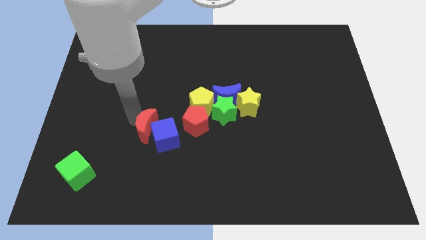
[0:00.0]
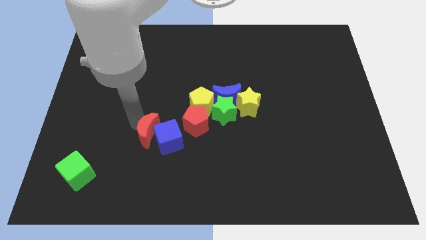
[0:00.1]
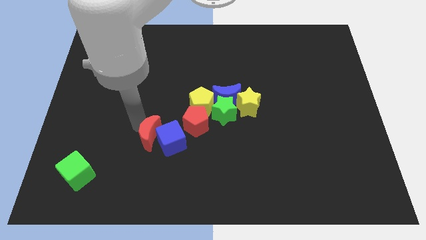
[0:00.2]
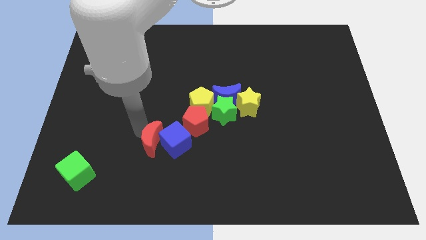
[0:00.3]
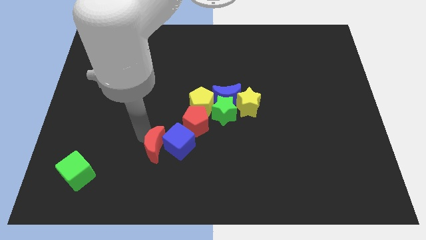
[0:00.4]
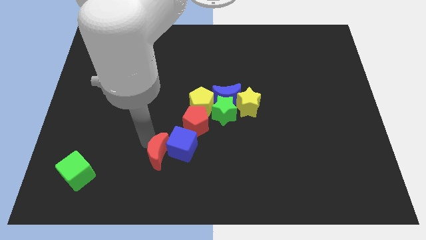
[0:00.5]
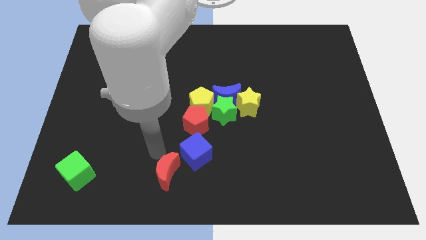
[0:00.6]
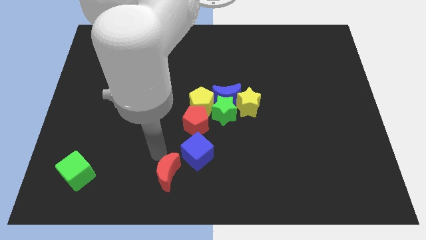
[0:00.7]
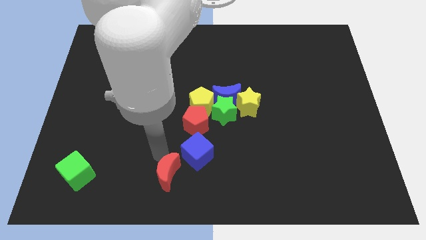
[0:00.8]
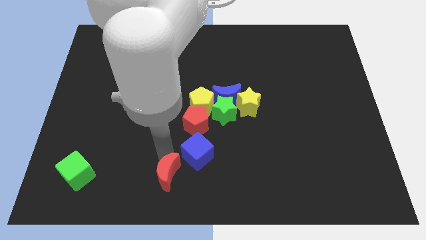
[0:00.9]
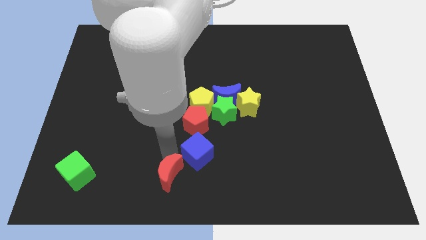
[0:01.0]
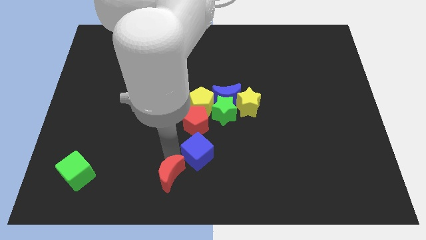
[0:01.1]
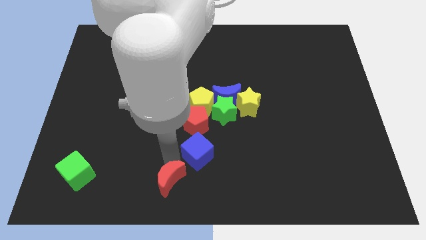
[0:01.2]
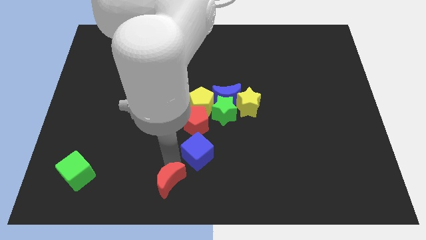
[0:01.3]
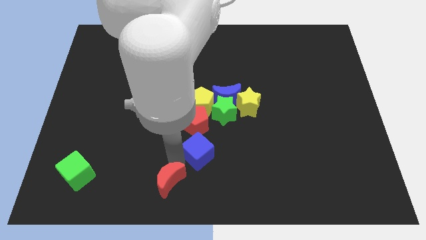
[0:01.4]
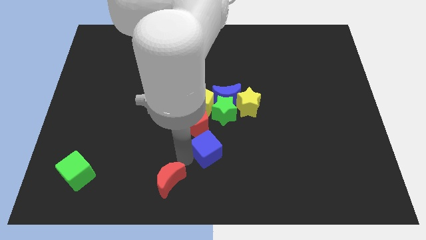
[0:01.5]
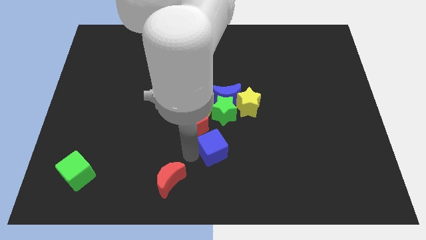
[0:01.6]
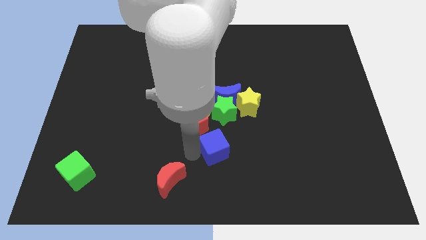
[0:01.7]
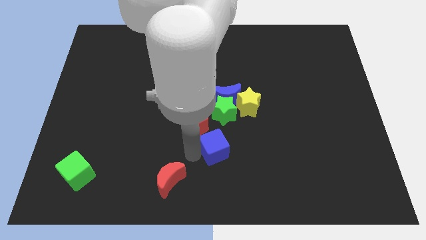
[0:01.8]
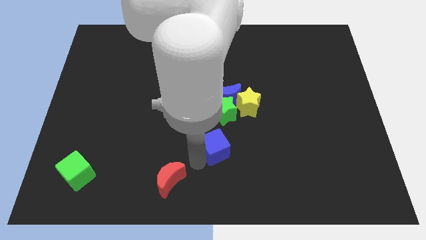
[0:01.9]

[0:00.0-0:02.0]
put the red moon diagonally bottom left to the blue cube

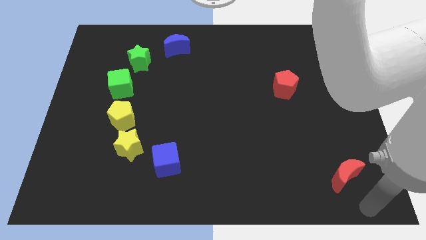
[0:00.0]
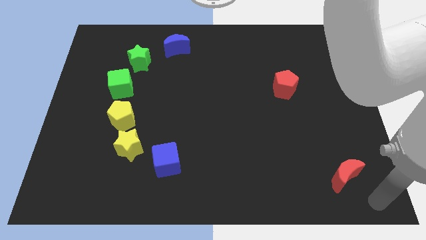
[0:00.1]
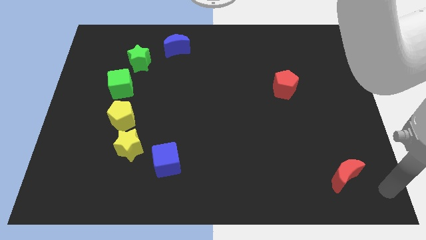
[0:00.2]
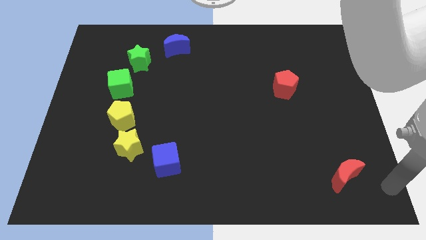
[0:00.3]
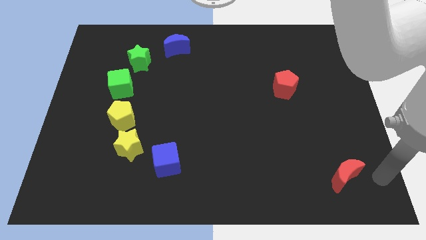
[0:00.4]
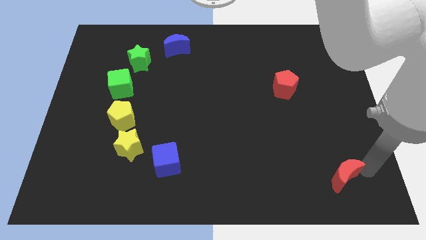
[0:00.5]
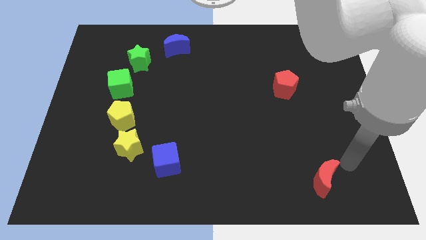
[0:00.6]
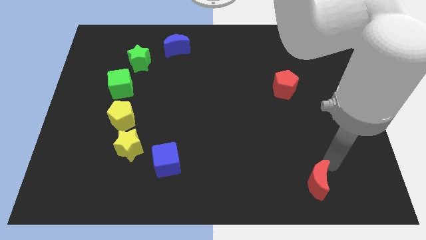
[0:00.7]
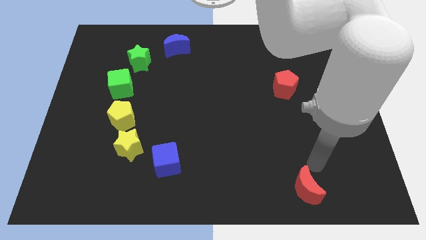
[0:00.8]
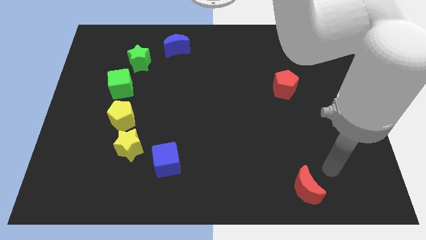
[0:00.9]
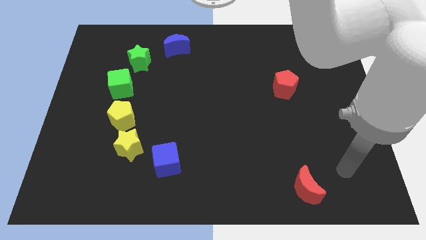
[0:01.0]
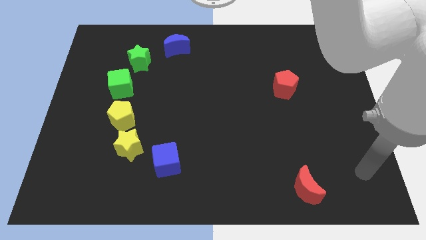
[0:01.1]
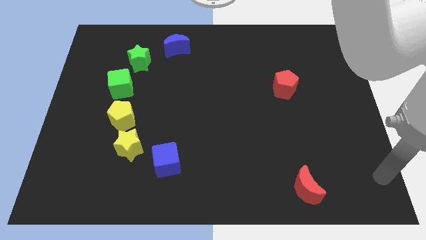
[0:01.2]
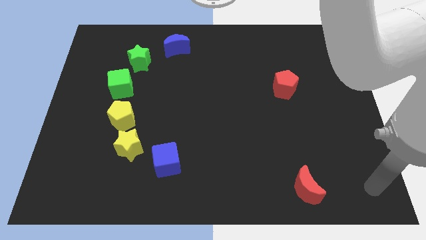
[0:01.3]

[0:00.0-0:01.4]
push the red crescent to the left of the board

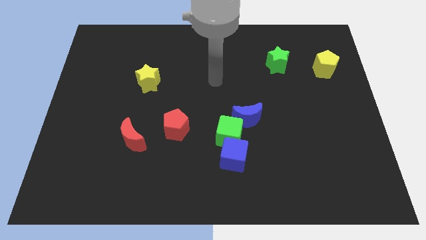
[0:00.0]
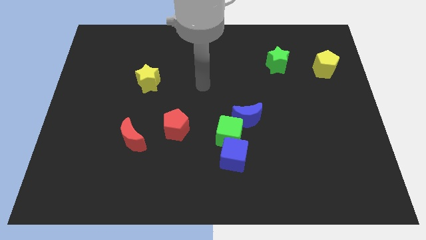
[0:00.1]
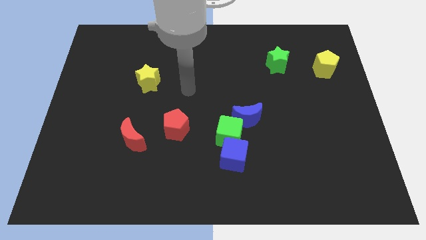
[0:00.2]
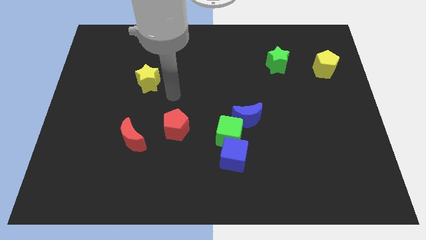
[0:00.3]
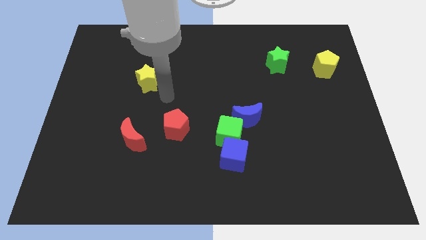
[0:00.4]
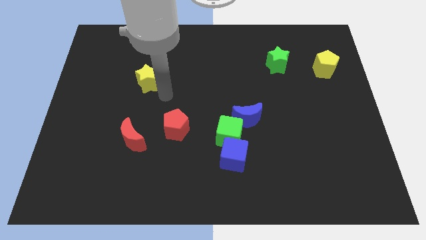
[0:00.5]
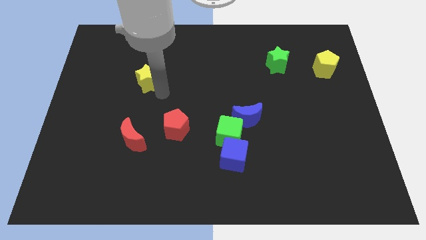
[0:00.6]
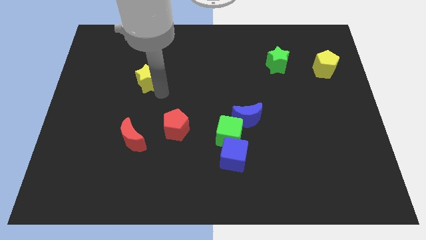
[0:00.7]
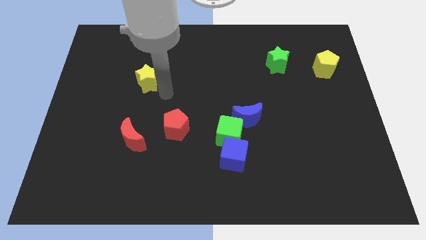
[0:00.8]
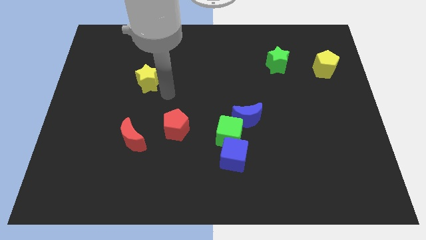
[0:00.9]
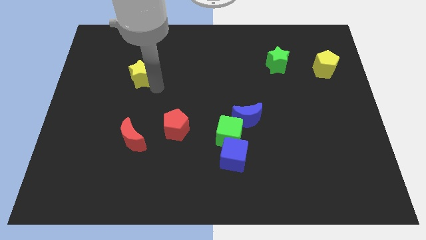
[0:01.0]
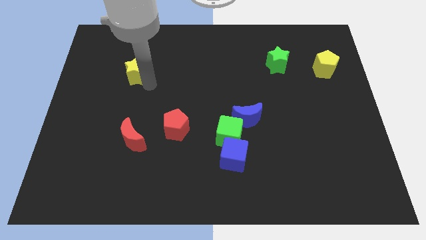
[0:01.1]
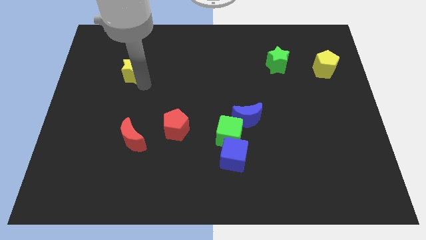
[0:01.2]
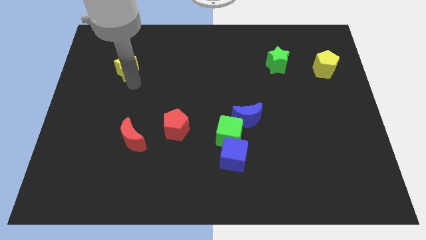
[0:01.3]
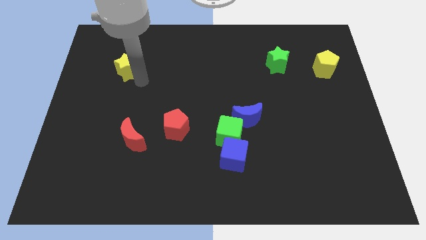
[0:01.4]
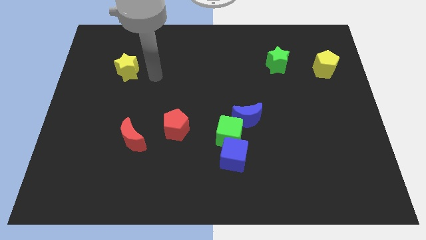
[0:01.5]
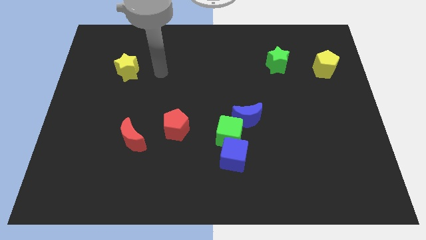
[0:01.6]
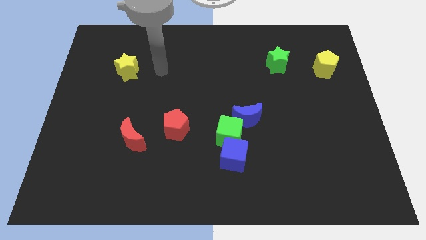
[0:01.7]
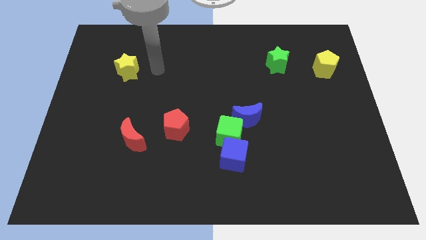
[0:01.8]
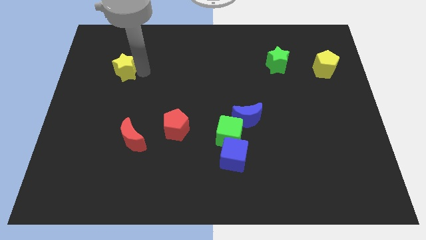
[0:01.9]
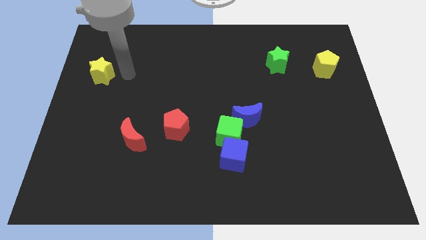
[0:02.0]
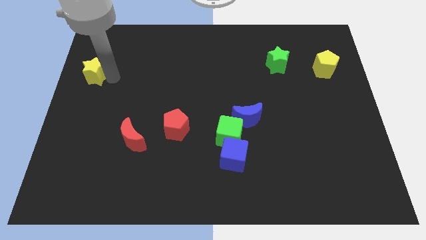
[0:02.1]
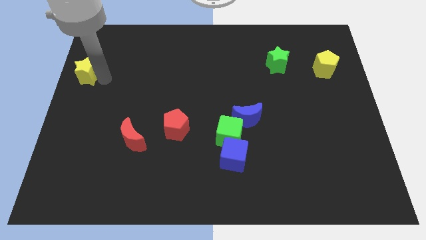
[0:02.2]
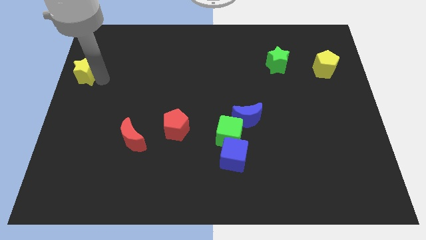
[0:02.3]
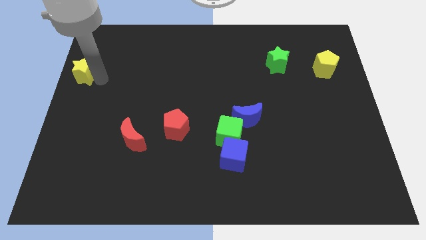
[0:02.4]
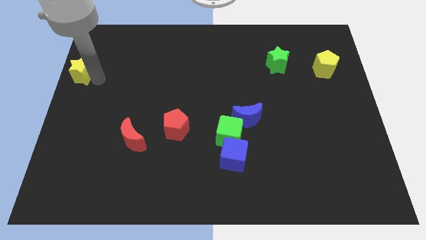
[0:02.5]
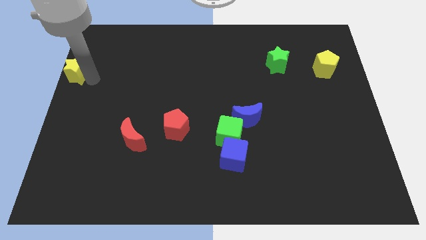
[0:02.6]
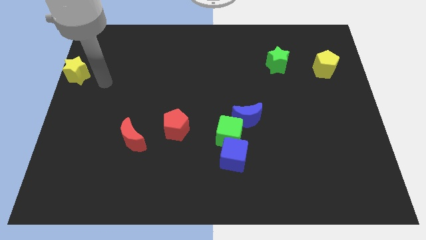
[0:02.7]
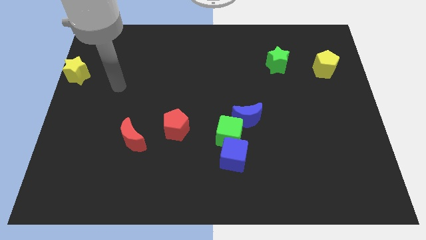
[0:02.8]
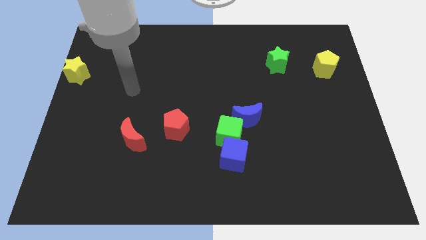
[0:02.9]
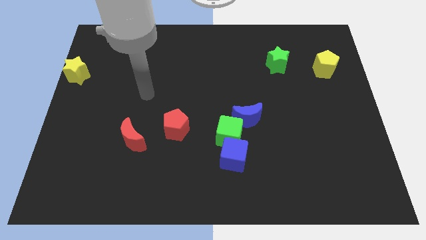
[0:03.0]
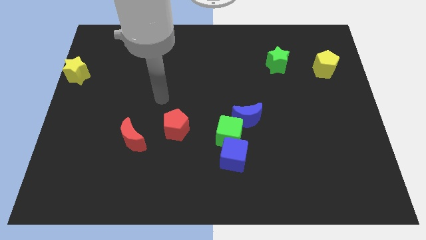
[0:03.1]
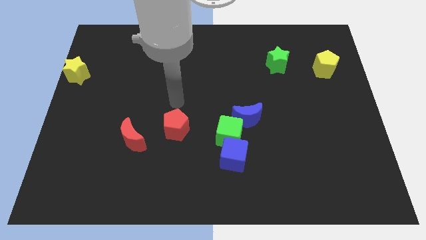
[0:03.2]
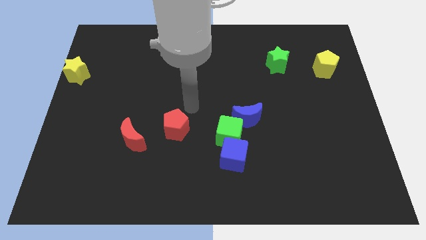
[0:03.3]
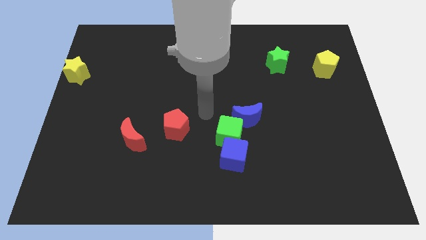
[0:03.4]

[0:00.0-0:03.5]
move the yellow star to the top left side of the board

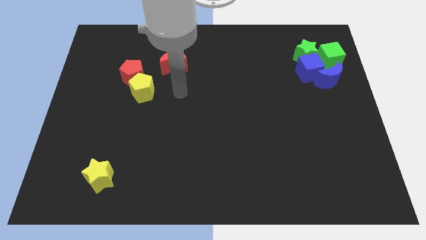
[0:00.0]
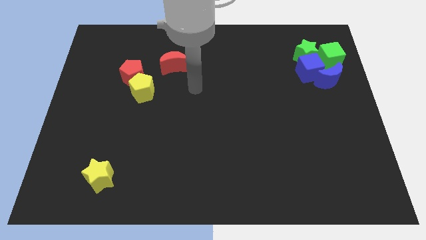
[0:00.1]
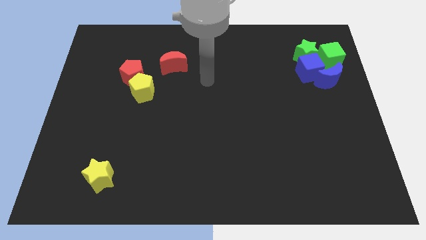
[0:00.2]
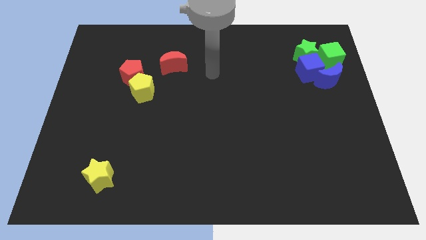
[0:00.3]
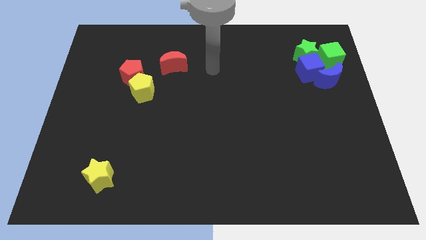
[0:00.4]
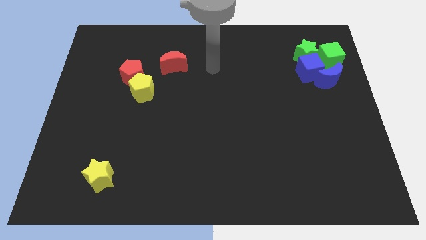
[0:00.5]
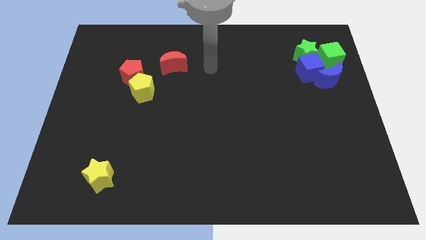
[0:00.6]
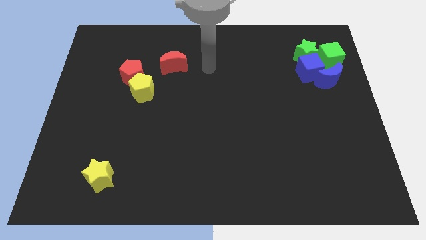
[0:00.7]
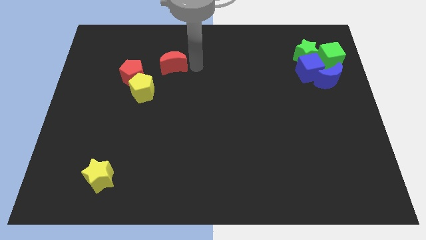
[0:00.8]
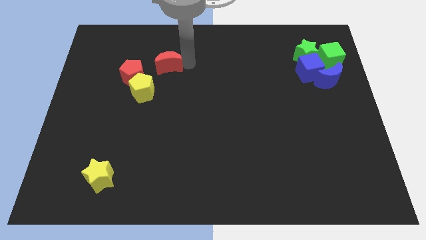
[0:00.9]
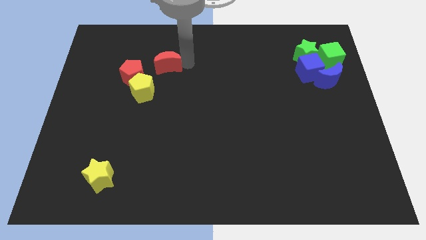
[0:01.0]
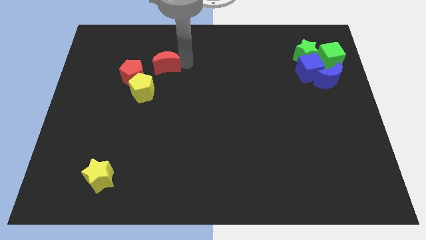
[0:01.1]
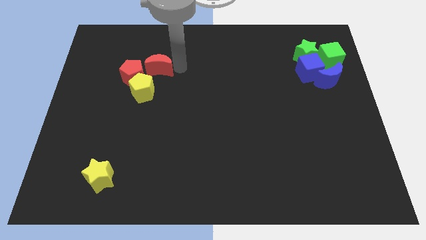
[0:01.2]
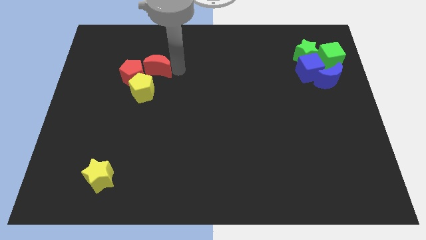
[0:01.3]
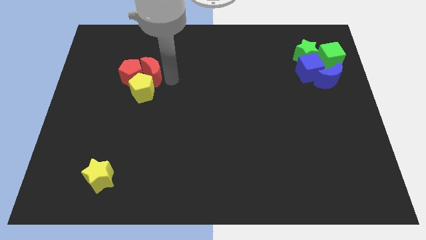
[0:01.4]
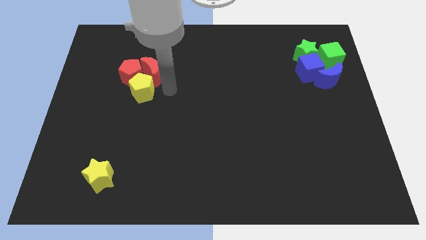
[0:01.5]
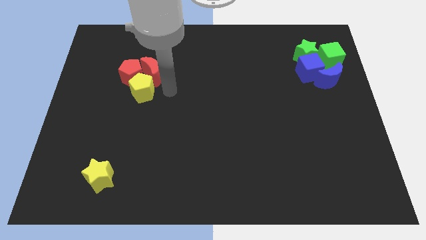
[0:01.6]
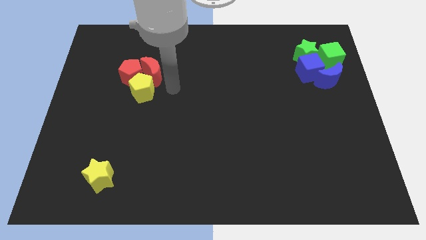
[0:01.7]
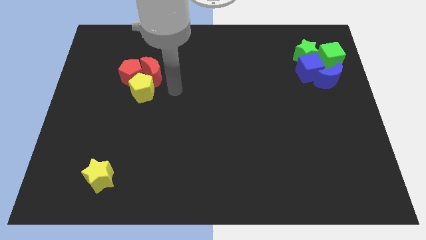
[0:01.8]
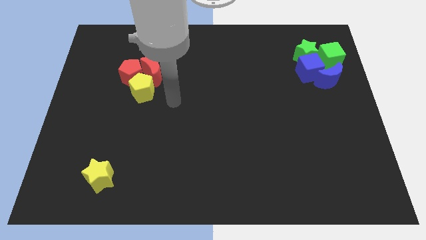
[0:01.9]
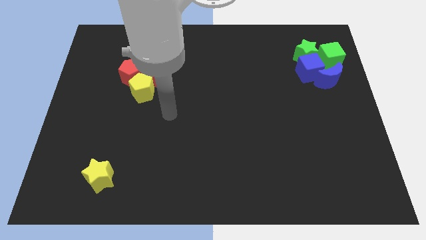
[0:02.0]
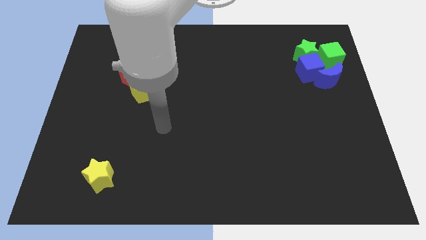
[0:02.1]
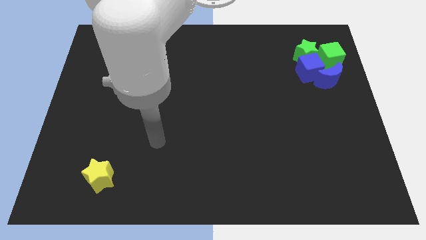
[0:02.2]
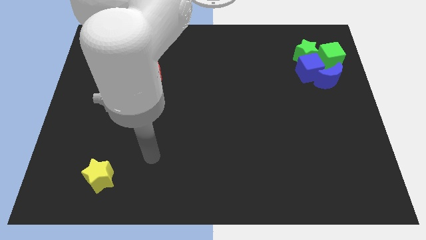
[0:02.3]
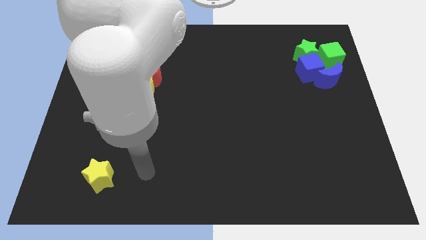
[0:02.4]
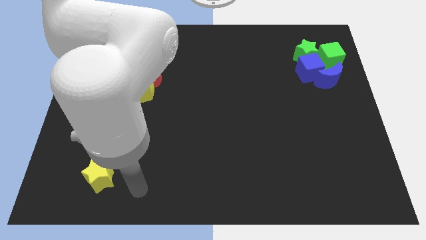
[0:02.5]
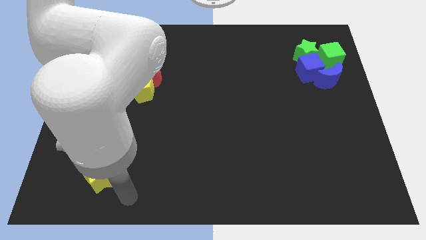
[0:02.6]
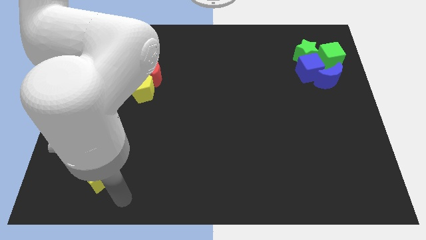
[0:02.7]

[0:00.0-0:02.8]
push the red moon towards the pentagons
